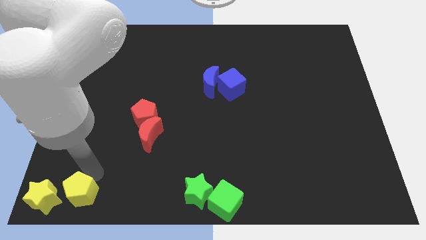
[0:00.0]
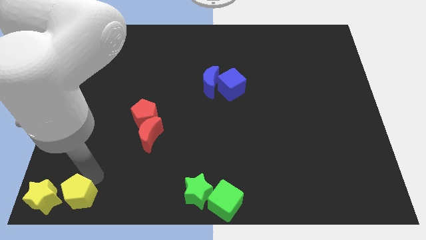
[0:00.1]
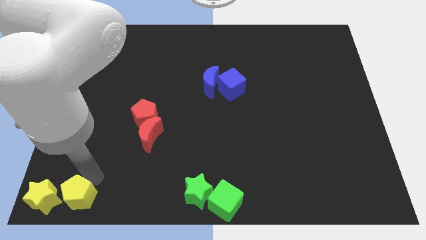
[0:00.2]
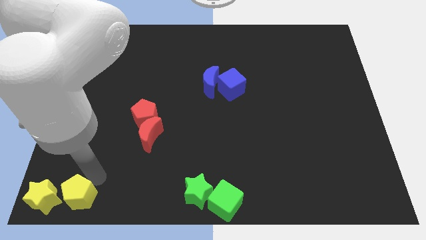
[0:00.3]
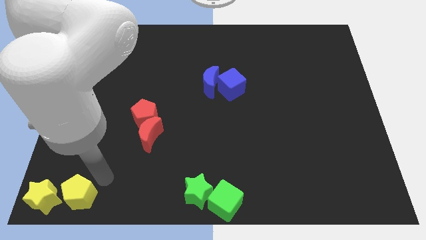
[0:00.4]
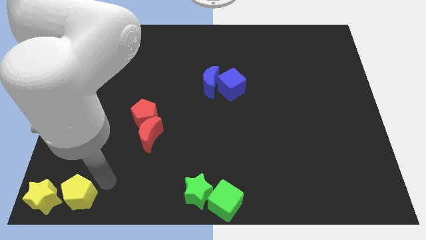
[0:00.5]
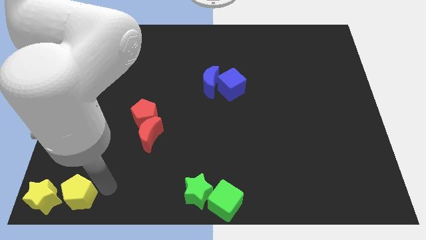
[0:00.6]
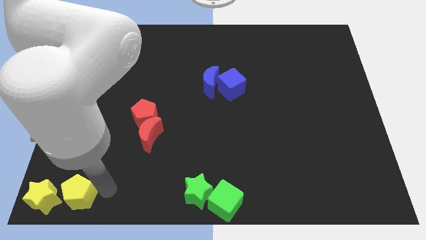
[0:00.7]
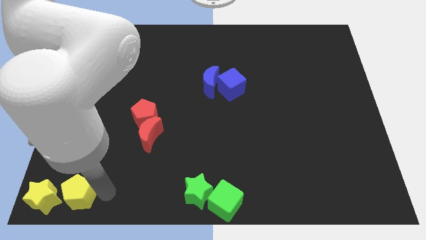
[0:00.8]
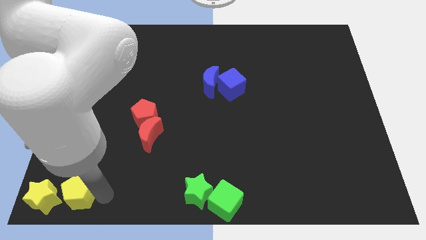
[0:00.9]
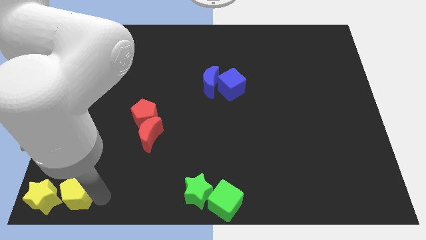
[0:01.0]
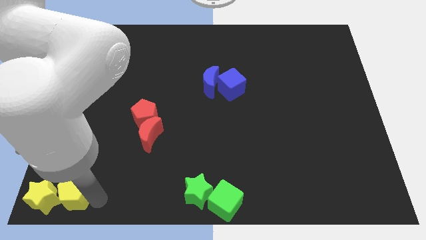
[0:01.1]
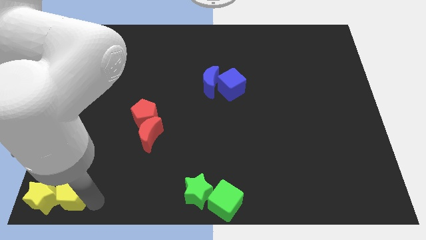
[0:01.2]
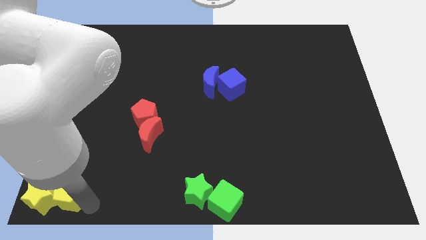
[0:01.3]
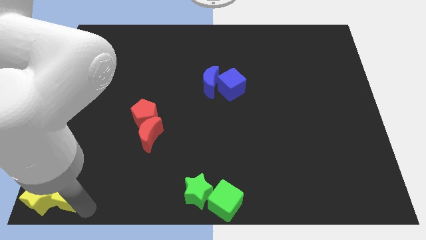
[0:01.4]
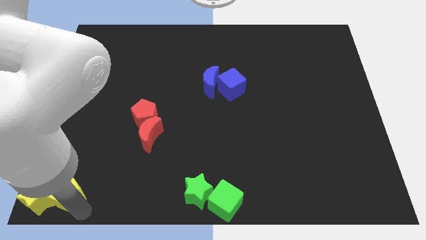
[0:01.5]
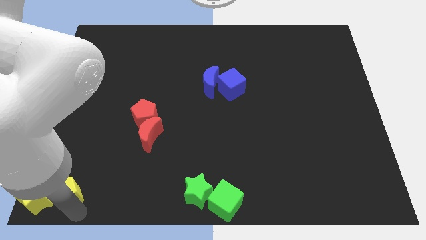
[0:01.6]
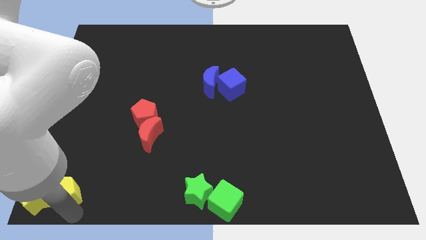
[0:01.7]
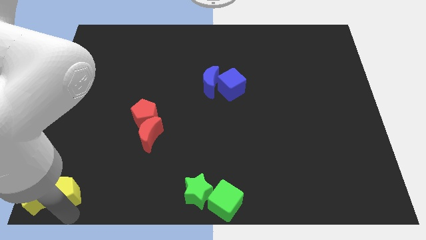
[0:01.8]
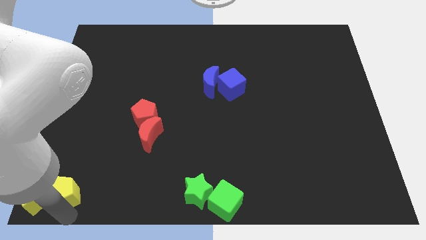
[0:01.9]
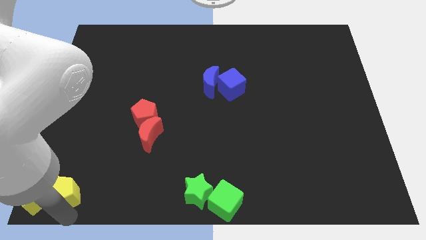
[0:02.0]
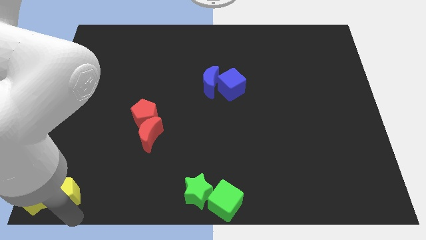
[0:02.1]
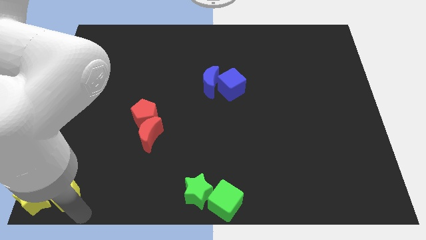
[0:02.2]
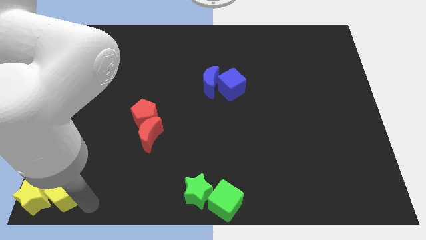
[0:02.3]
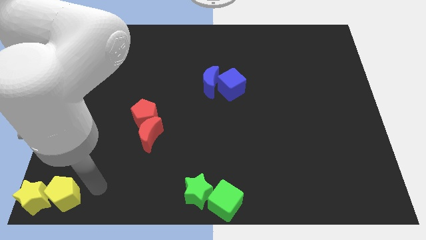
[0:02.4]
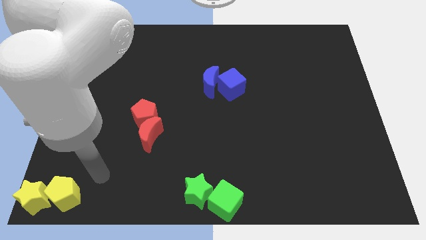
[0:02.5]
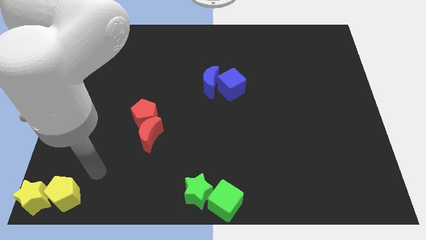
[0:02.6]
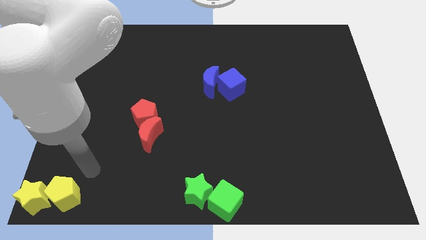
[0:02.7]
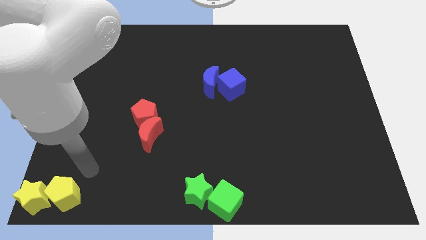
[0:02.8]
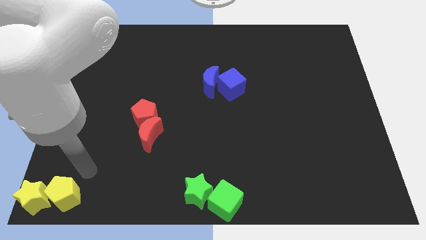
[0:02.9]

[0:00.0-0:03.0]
place the yellow pentagon to the right of the yellow star

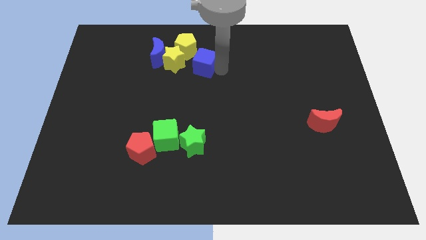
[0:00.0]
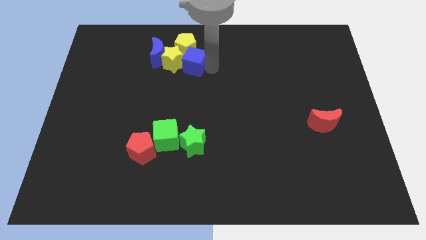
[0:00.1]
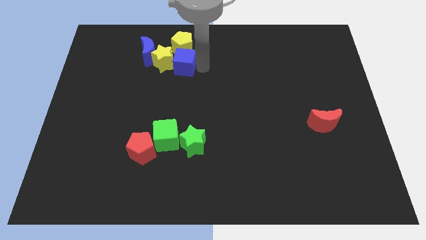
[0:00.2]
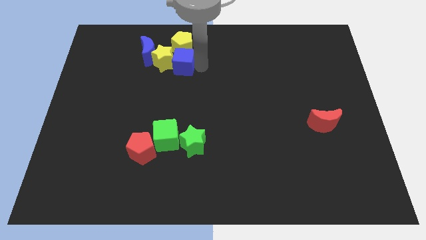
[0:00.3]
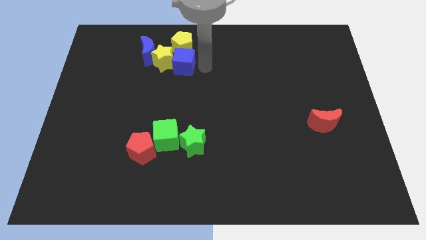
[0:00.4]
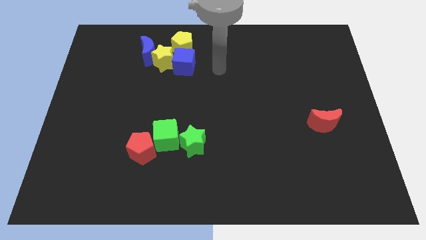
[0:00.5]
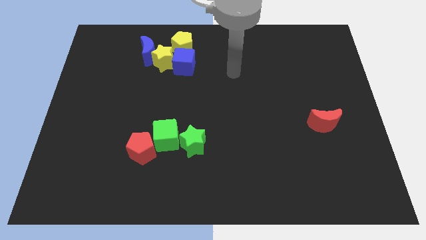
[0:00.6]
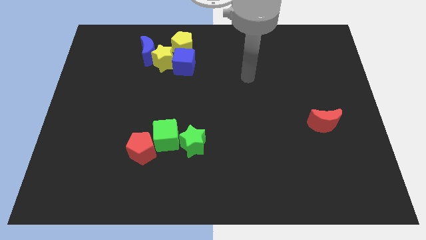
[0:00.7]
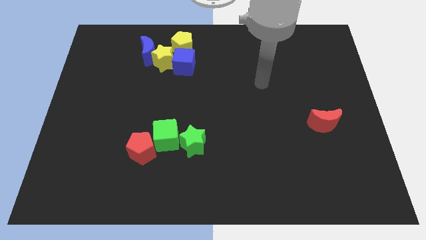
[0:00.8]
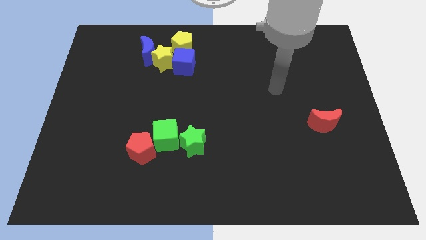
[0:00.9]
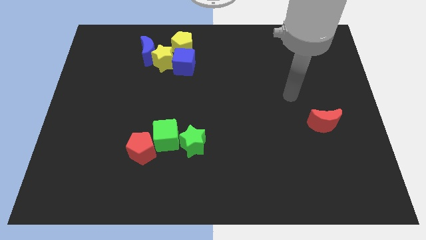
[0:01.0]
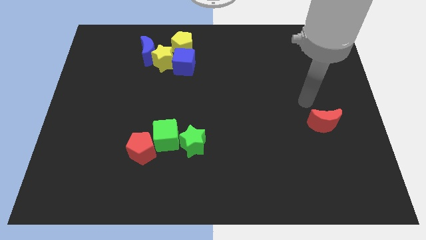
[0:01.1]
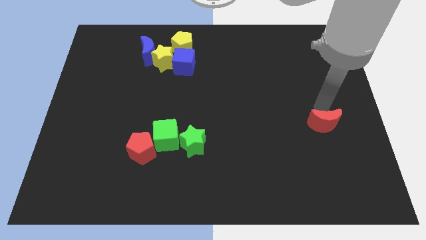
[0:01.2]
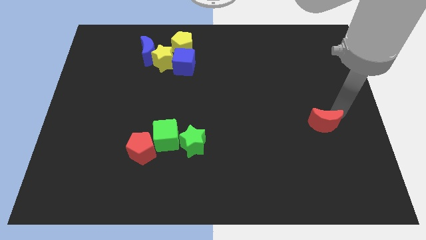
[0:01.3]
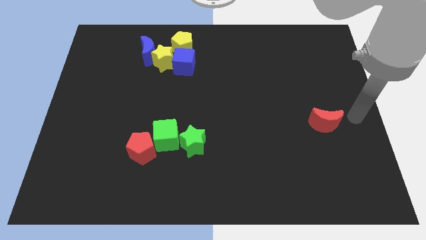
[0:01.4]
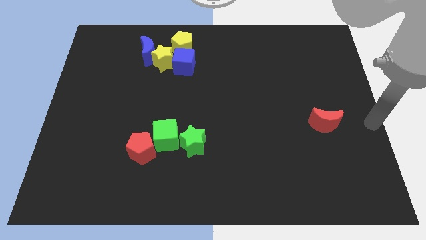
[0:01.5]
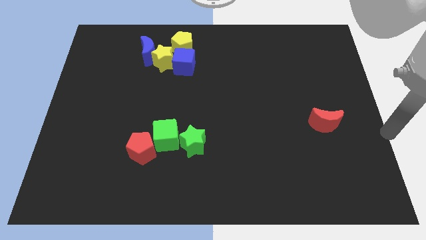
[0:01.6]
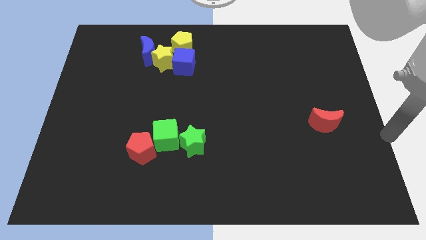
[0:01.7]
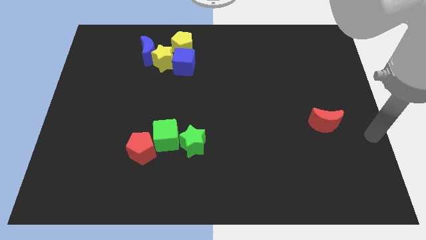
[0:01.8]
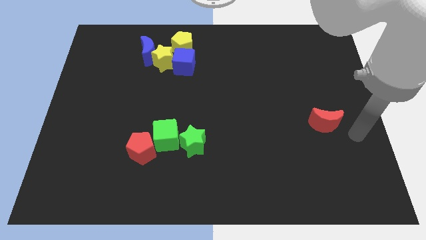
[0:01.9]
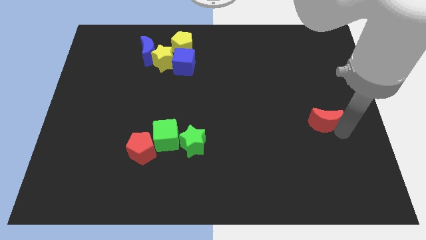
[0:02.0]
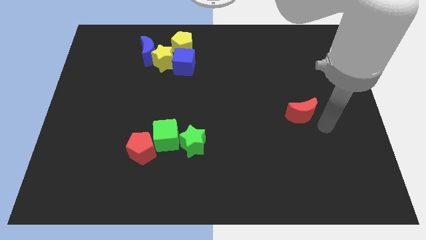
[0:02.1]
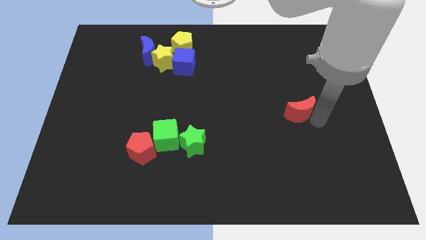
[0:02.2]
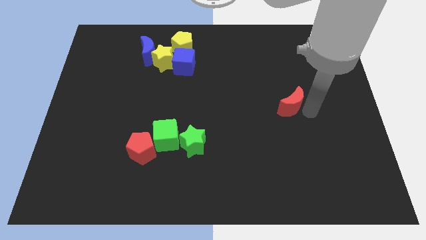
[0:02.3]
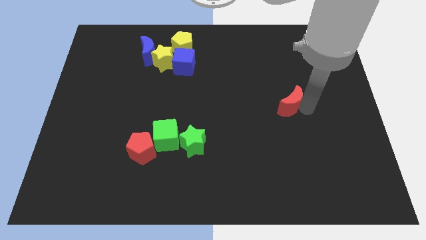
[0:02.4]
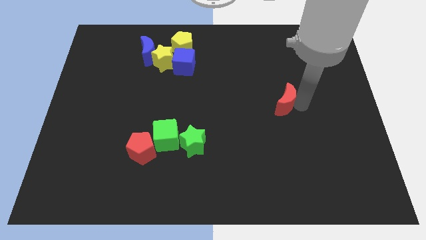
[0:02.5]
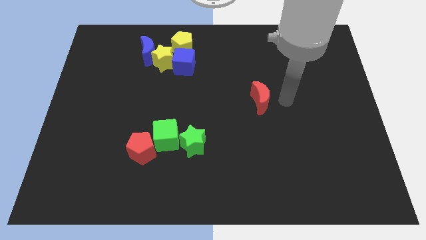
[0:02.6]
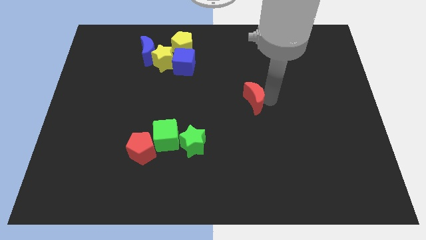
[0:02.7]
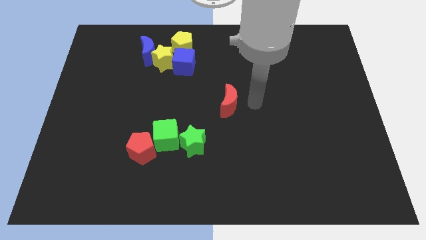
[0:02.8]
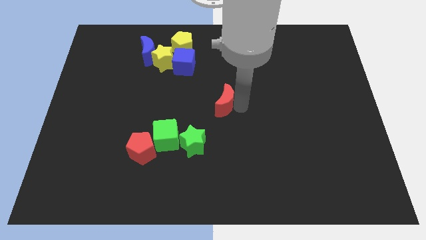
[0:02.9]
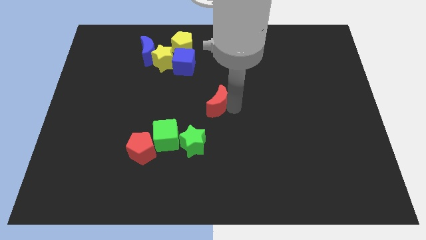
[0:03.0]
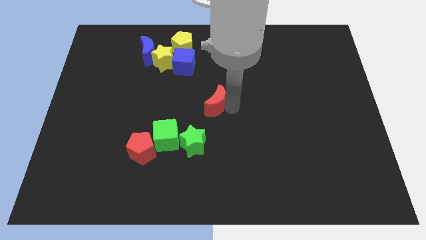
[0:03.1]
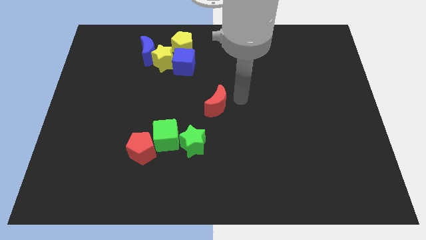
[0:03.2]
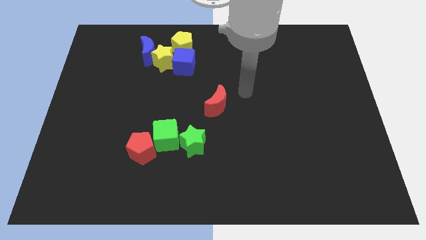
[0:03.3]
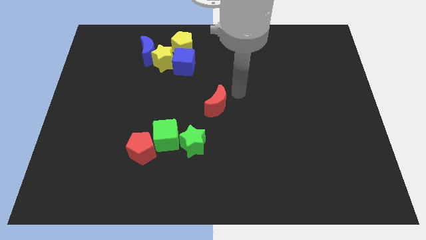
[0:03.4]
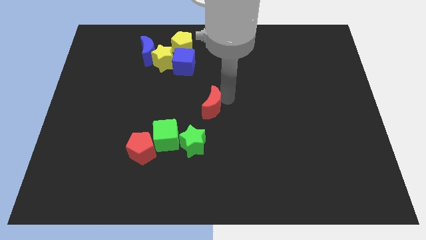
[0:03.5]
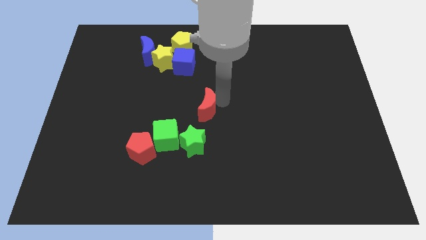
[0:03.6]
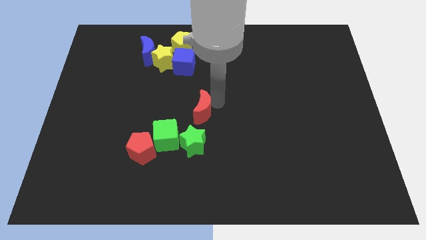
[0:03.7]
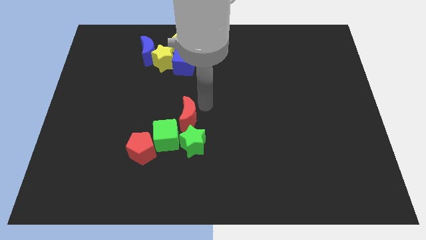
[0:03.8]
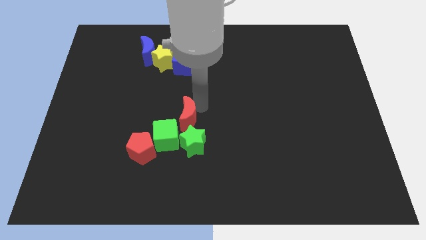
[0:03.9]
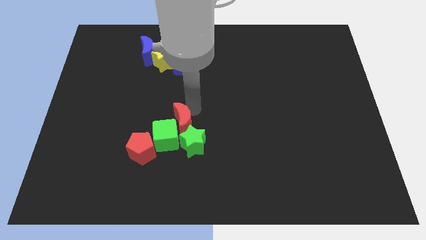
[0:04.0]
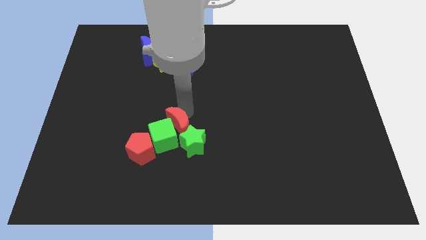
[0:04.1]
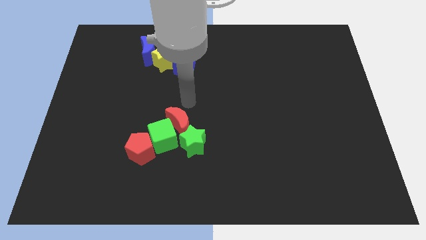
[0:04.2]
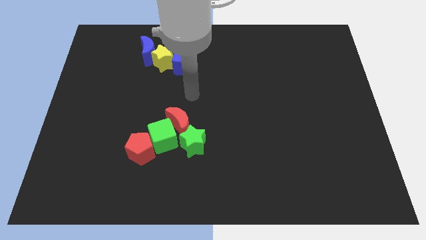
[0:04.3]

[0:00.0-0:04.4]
push the red moon into the green cube

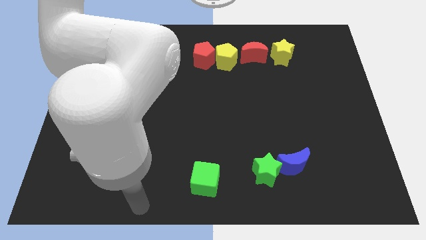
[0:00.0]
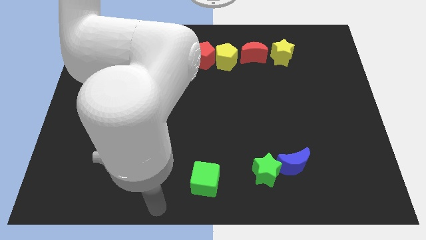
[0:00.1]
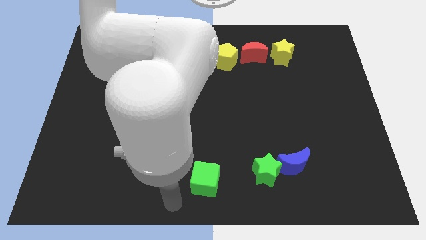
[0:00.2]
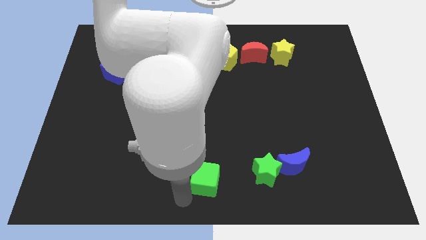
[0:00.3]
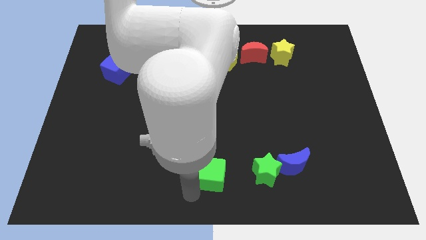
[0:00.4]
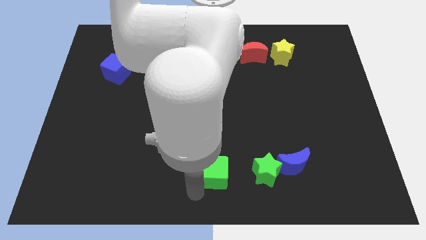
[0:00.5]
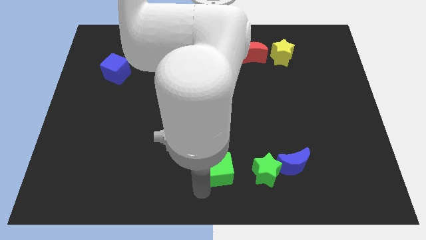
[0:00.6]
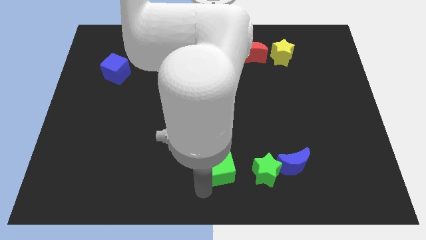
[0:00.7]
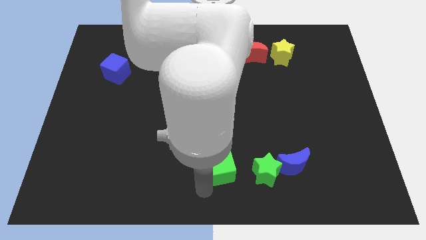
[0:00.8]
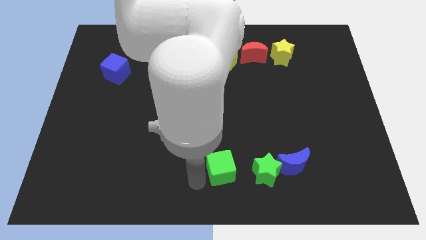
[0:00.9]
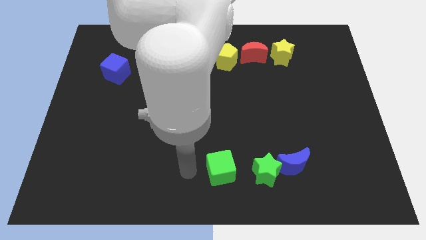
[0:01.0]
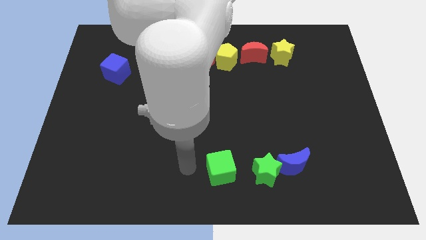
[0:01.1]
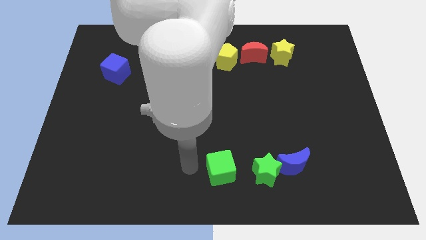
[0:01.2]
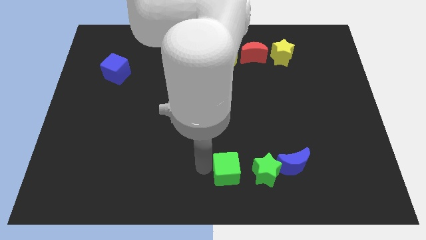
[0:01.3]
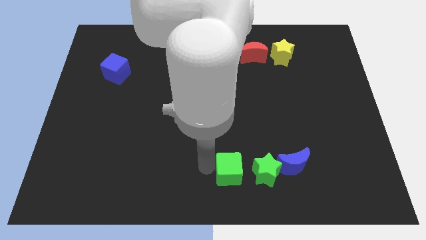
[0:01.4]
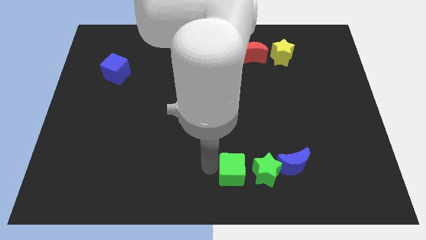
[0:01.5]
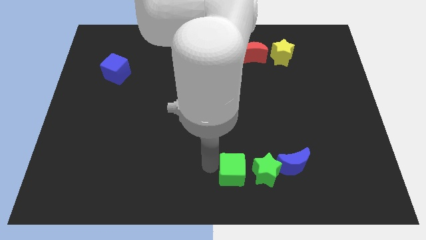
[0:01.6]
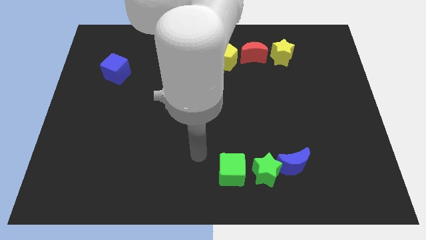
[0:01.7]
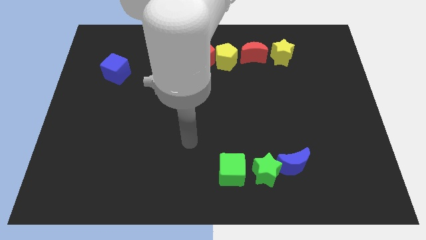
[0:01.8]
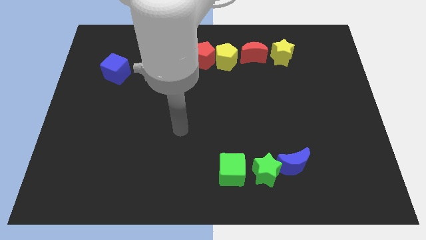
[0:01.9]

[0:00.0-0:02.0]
slide the green cube close to the left side of the green star
